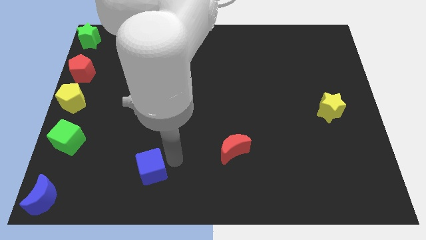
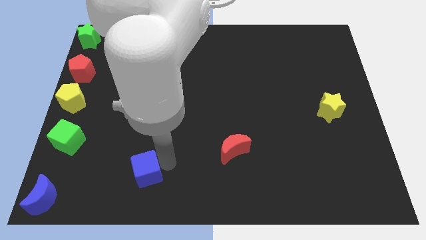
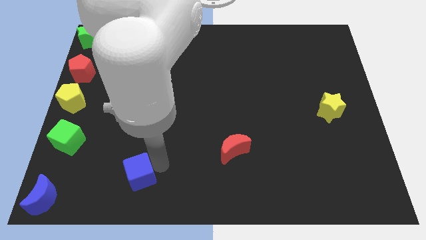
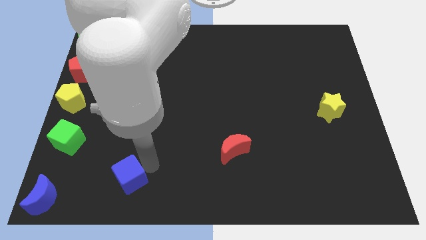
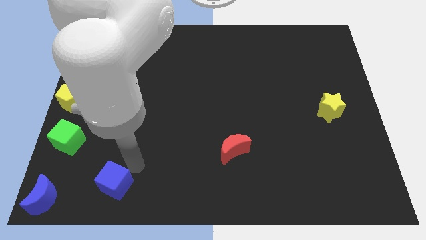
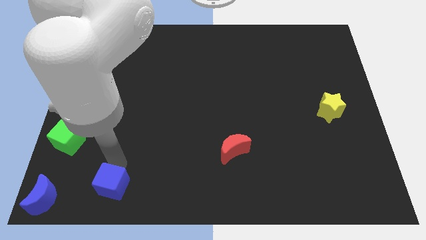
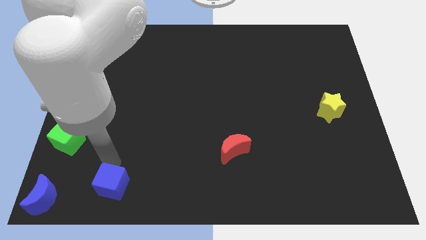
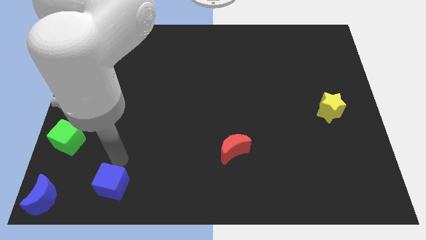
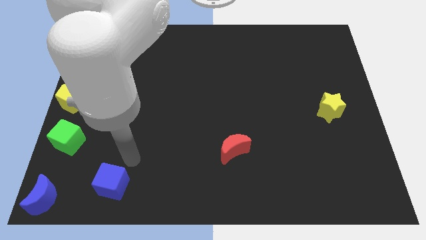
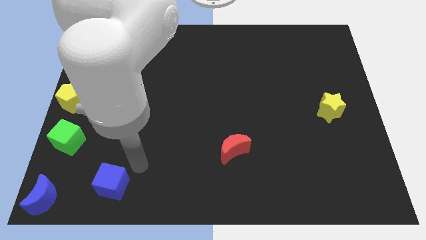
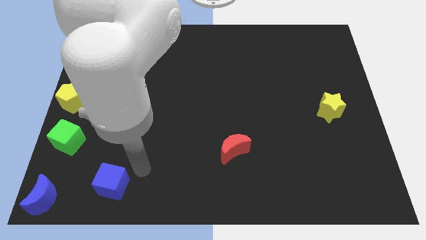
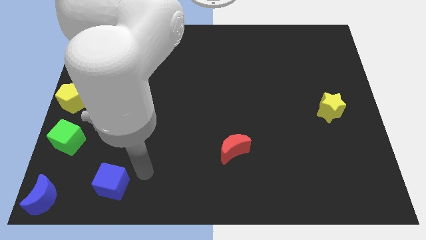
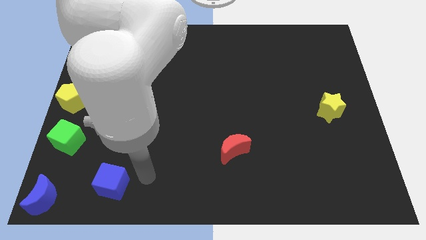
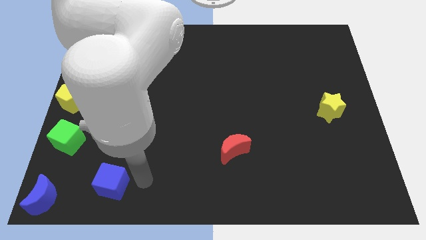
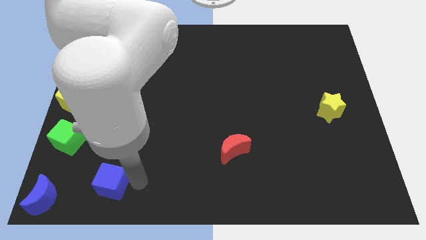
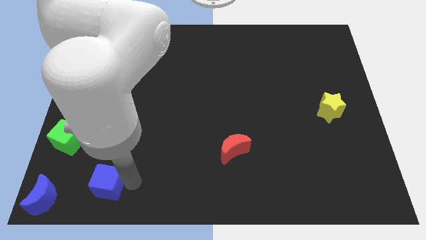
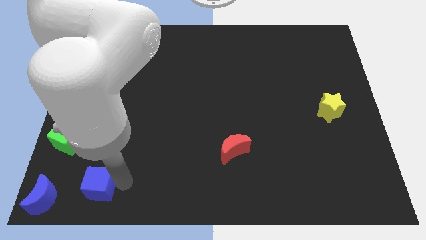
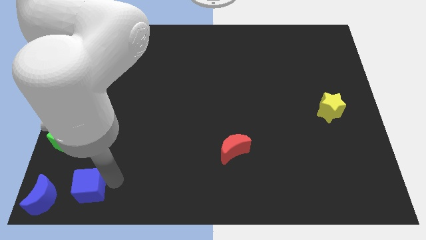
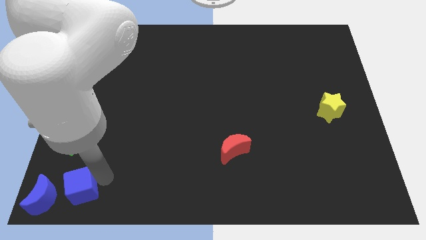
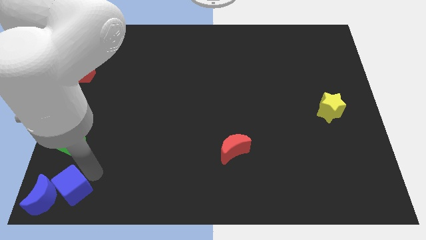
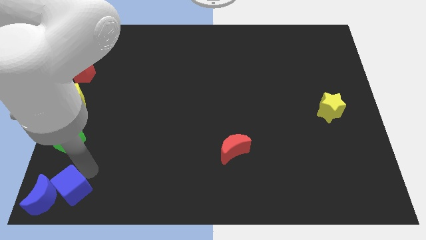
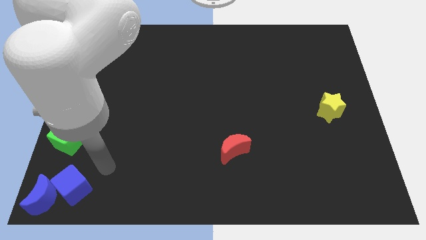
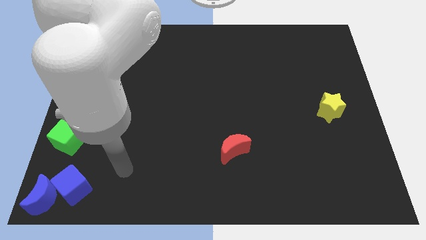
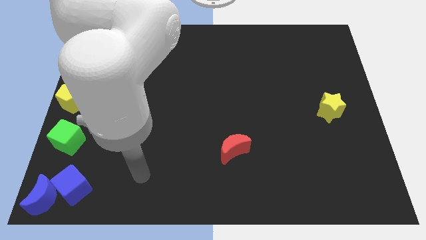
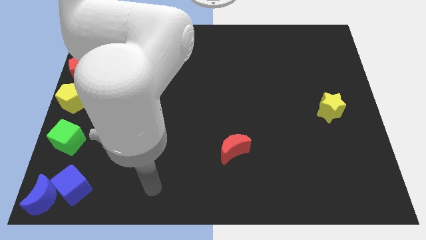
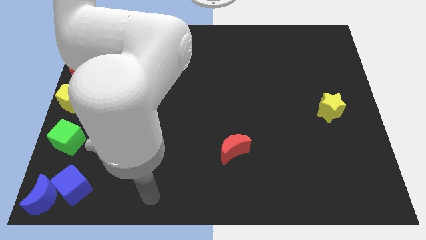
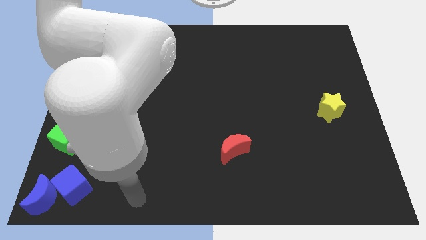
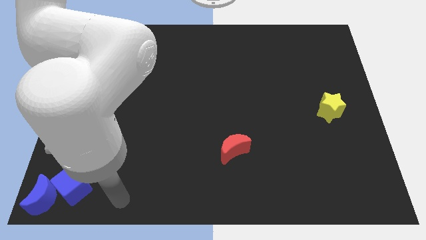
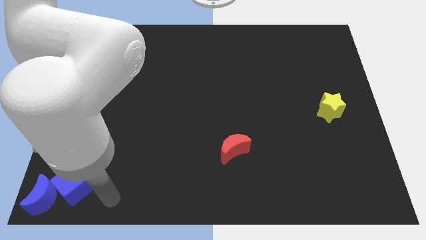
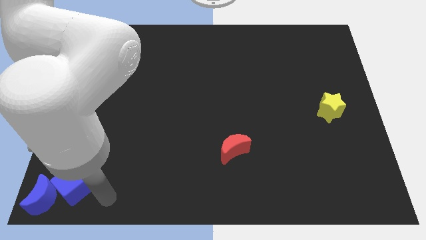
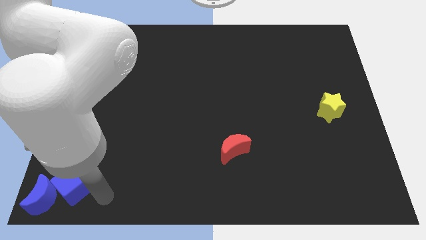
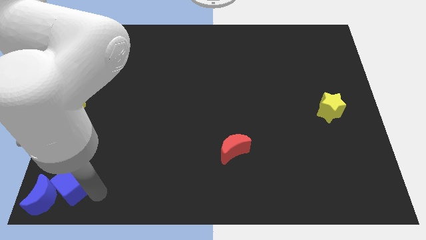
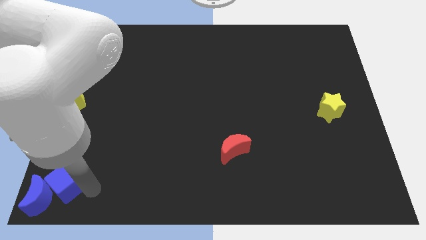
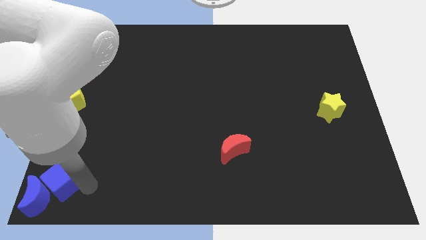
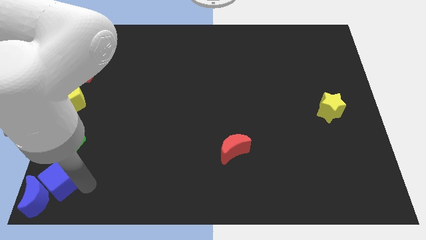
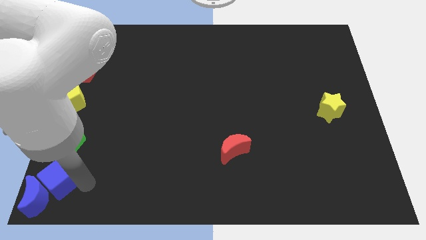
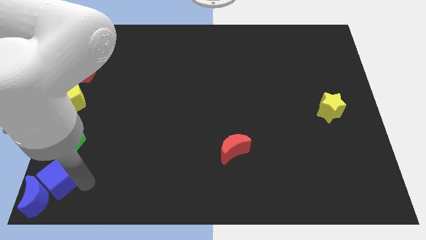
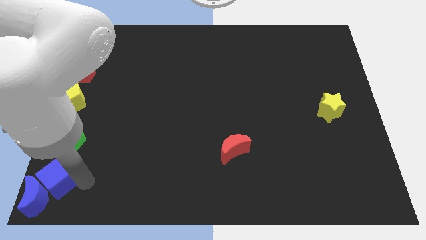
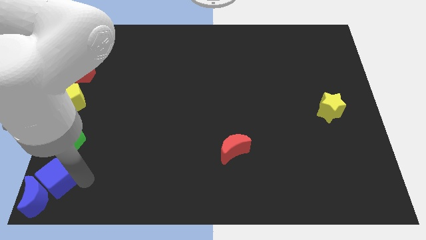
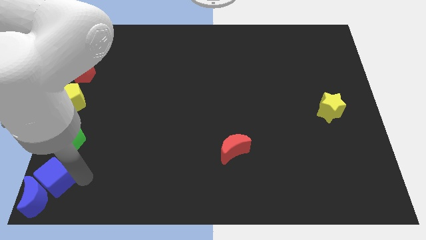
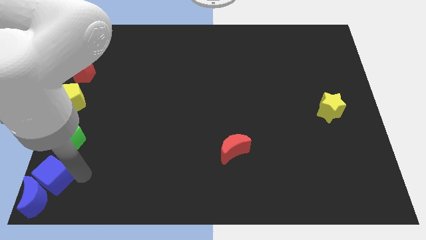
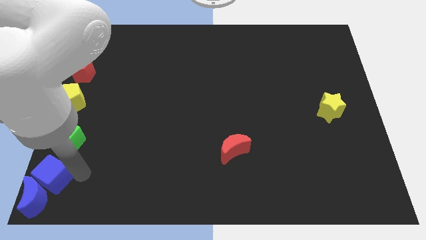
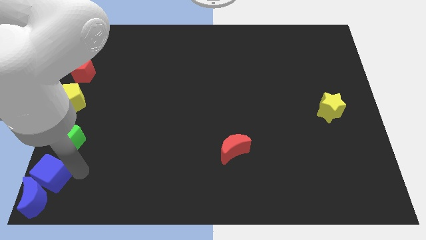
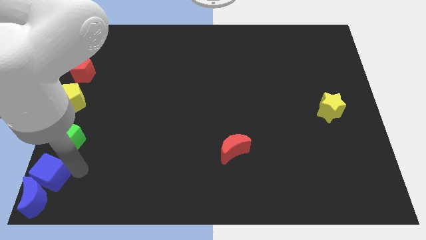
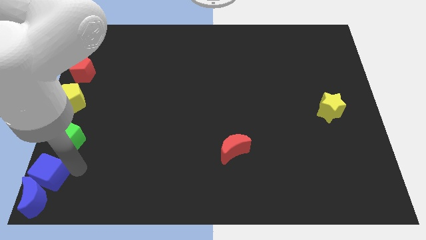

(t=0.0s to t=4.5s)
place the blue cube in between the blue crescent and green cube

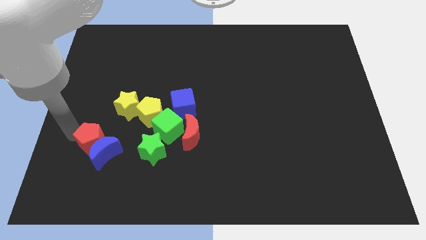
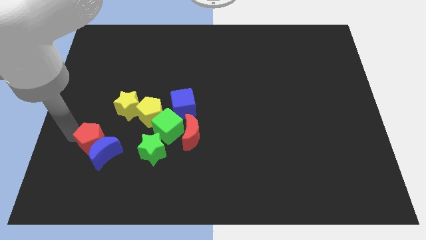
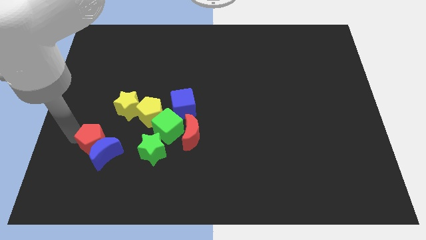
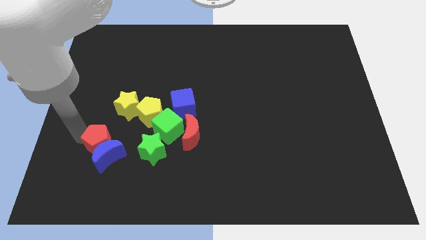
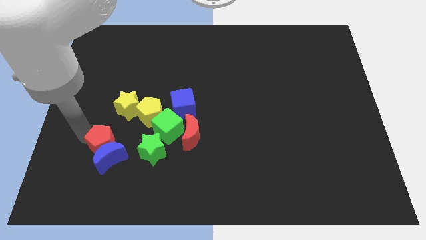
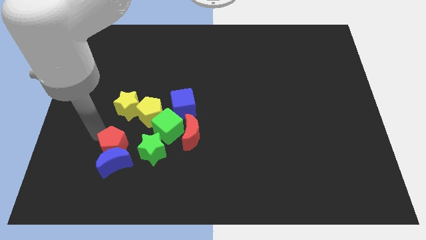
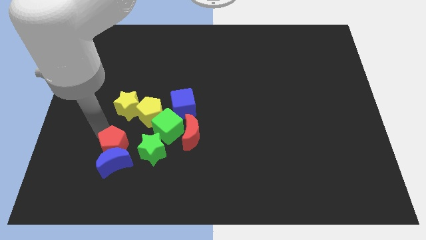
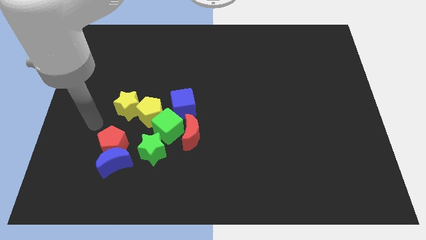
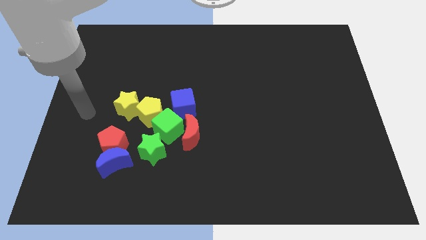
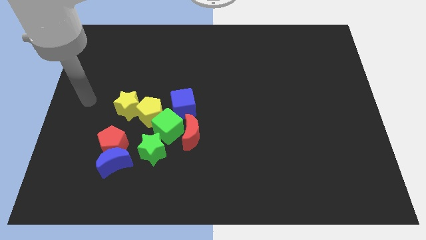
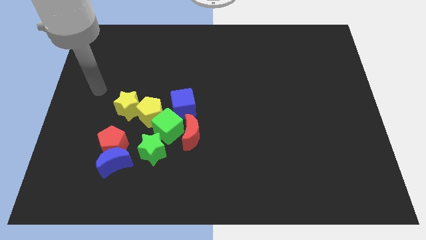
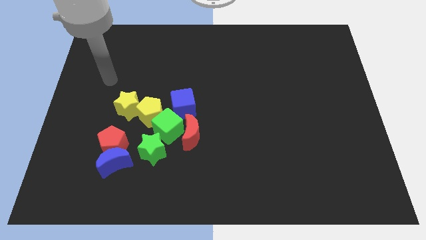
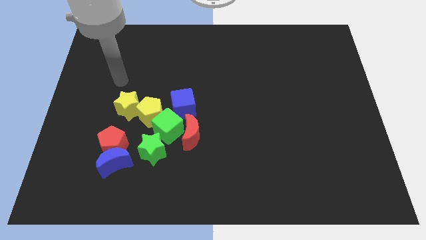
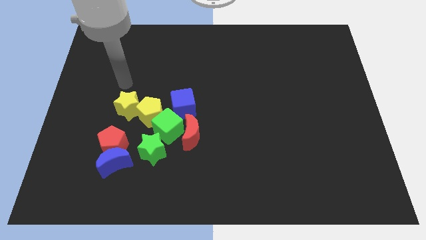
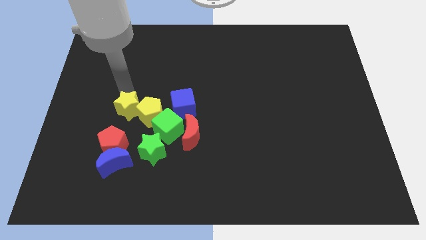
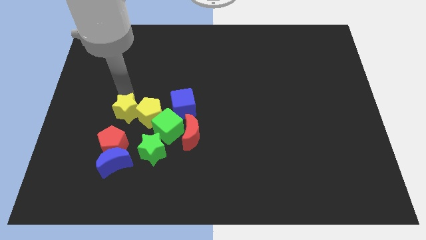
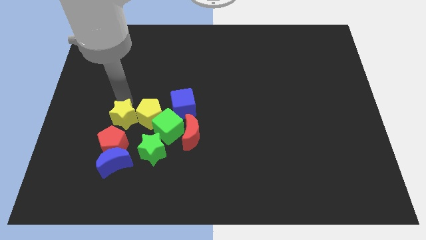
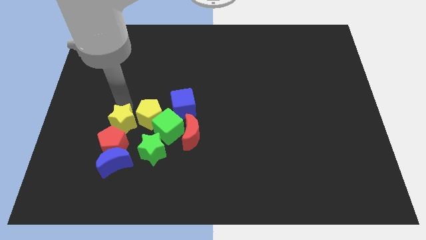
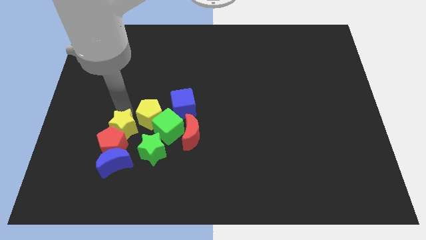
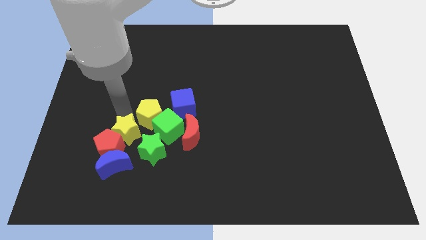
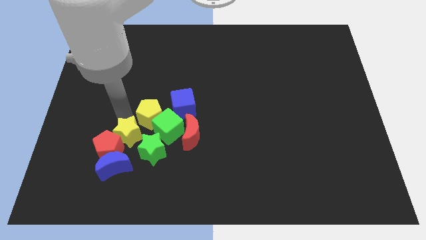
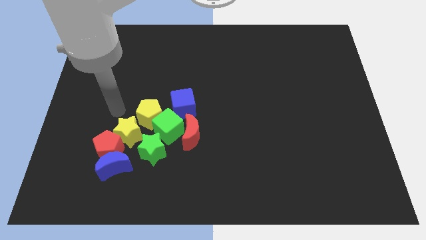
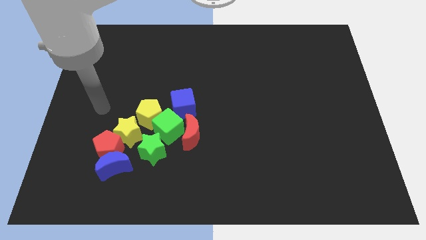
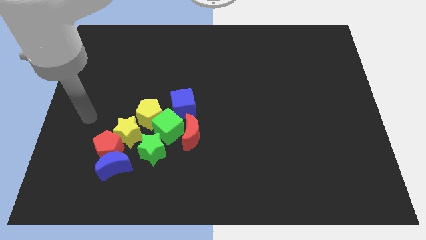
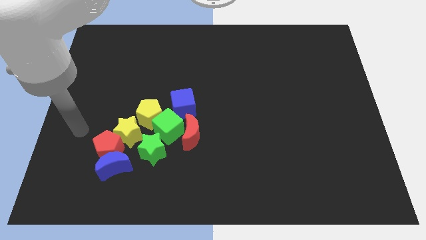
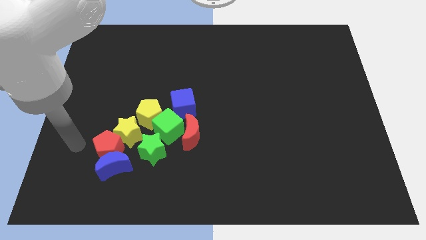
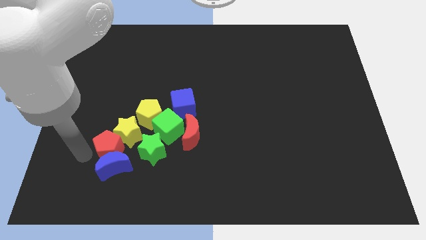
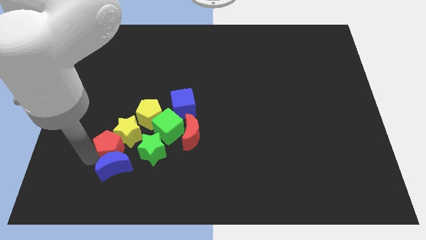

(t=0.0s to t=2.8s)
place red pentagon parallel to green star

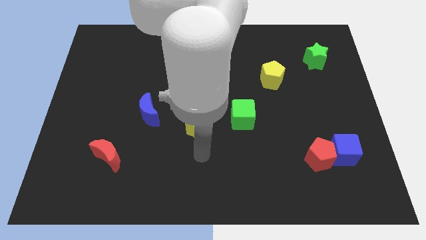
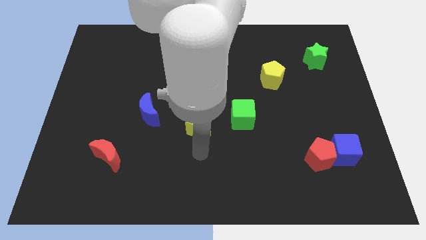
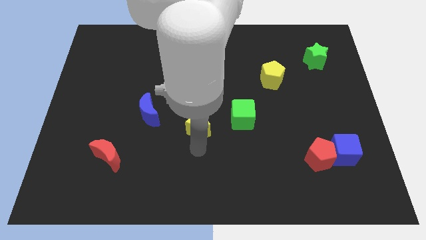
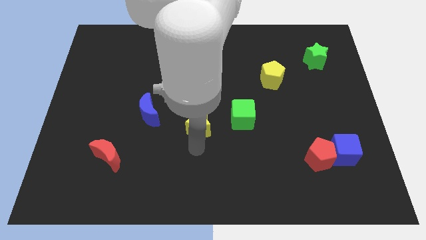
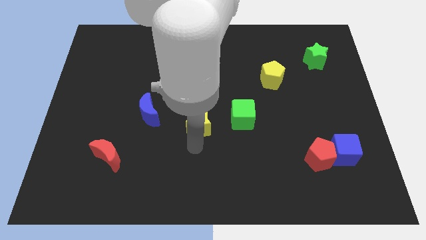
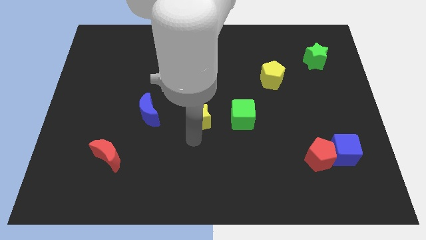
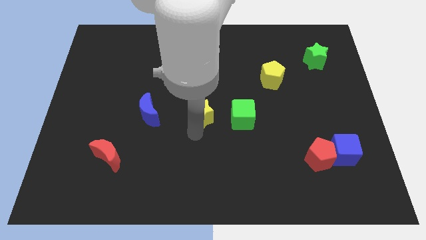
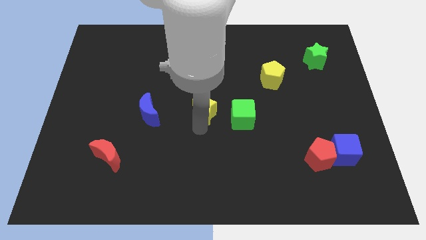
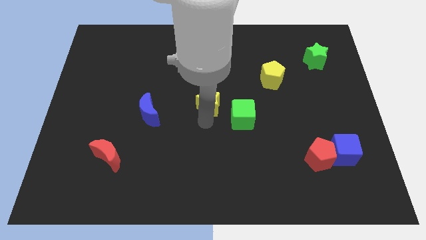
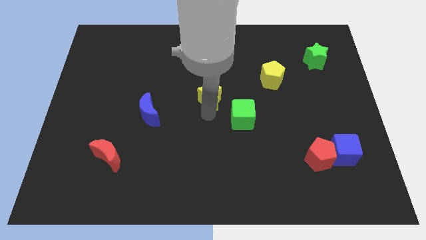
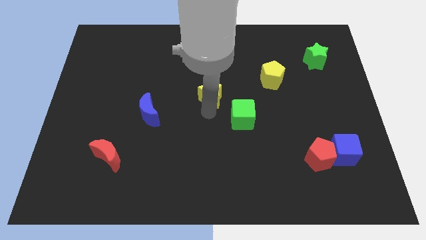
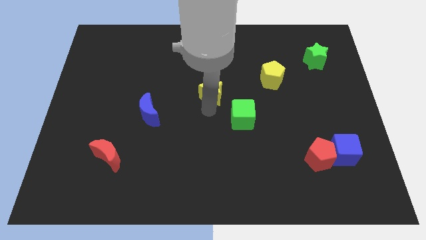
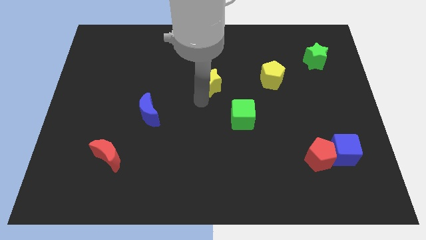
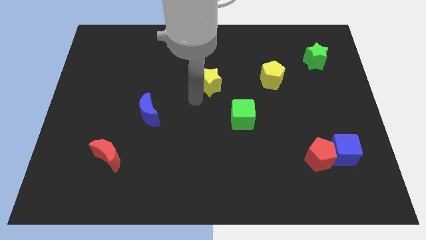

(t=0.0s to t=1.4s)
push the yellow star towards the top center of the board

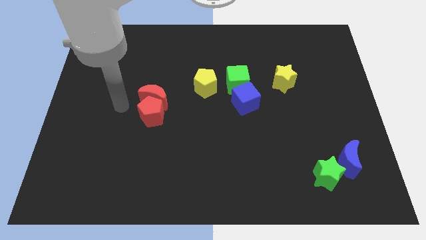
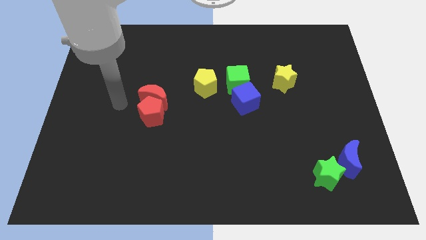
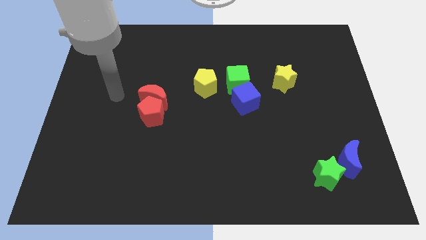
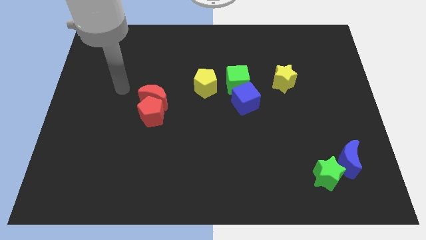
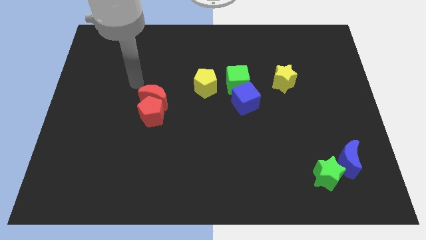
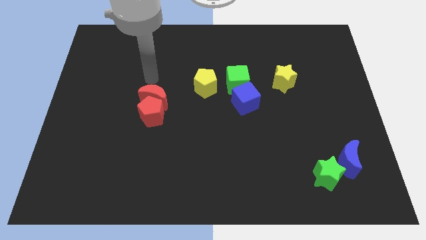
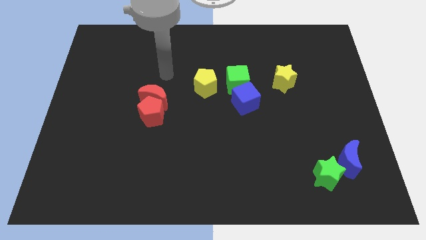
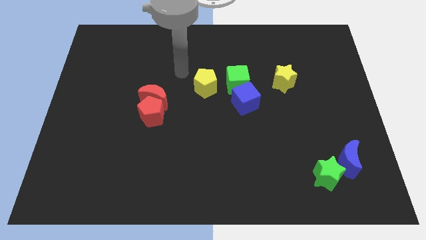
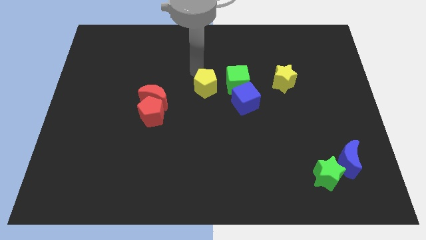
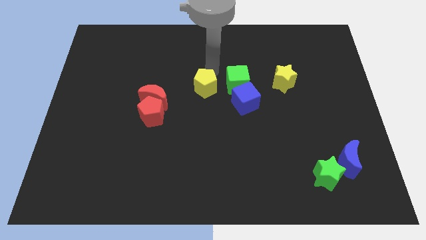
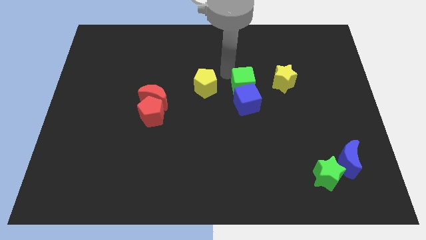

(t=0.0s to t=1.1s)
move your arm towards the green cube
